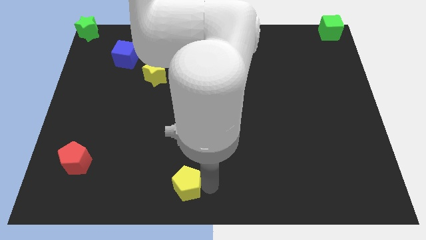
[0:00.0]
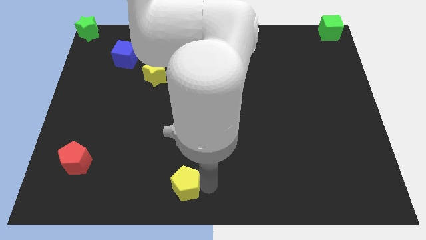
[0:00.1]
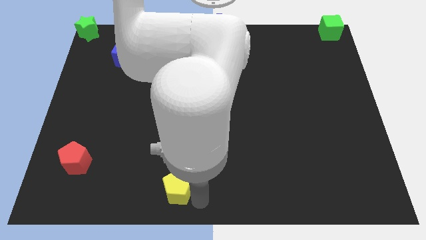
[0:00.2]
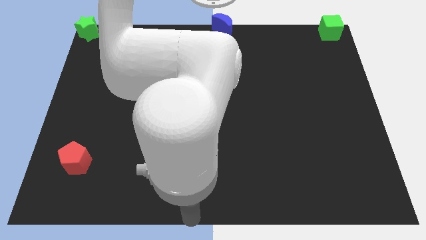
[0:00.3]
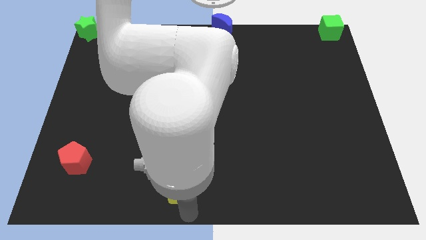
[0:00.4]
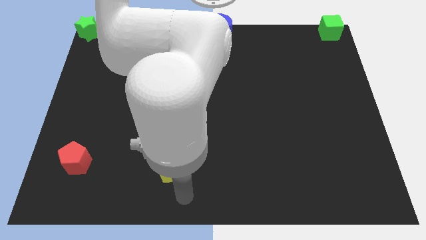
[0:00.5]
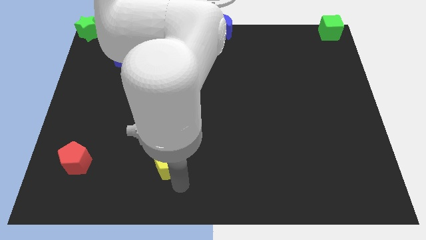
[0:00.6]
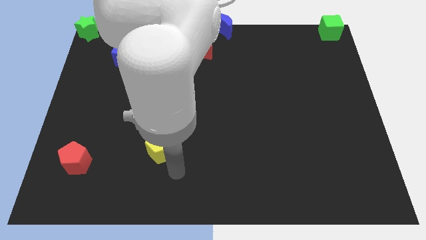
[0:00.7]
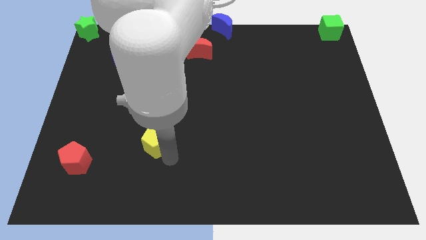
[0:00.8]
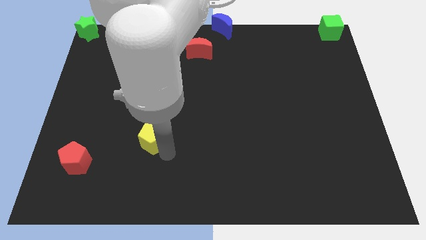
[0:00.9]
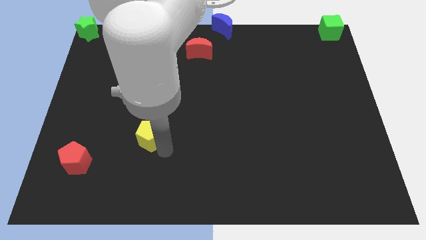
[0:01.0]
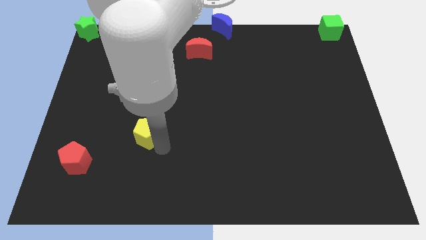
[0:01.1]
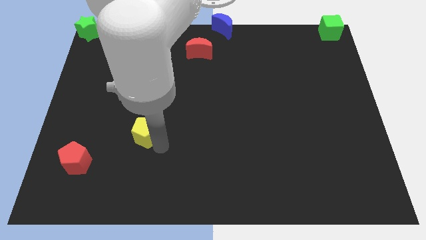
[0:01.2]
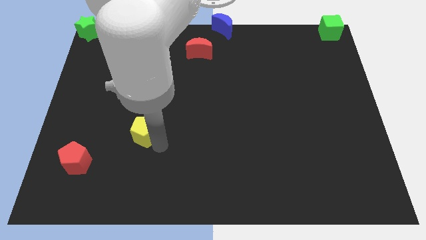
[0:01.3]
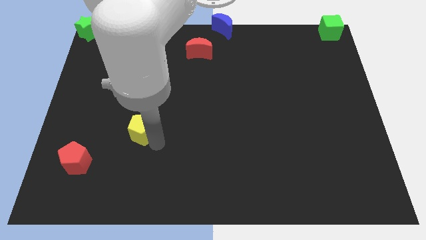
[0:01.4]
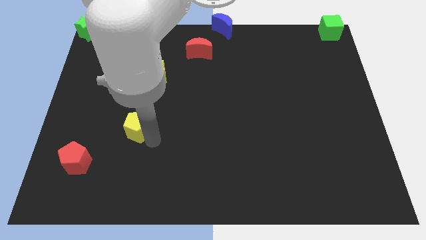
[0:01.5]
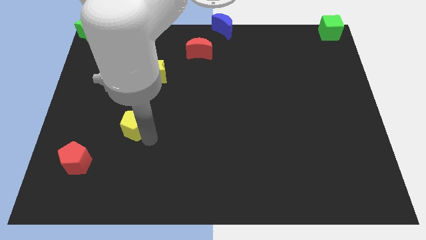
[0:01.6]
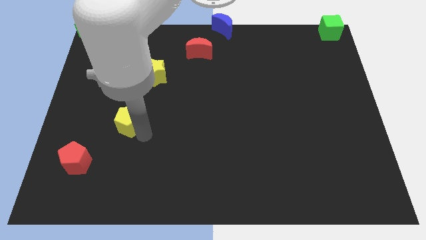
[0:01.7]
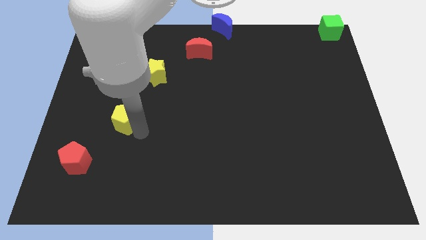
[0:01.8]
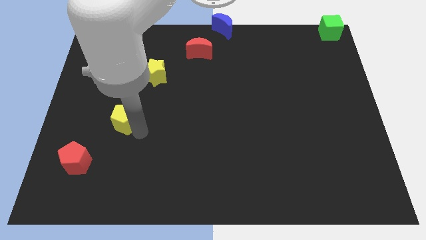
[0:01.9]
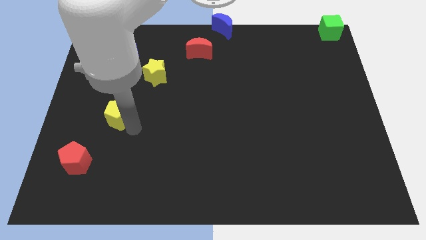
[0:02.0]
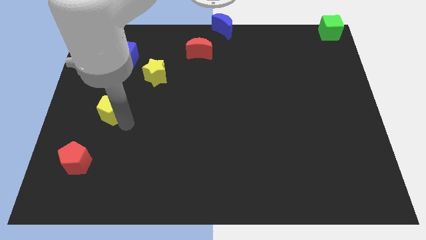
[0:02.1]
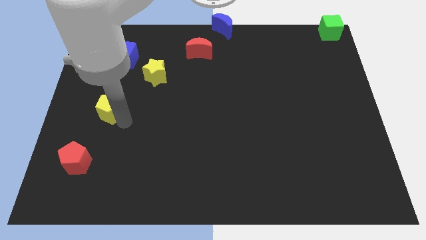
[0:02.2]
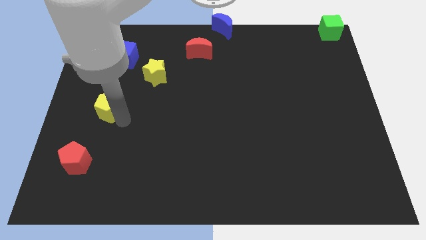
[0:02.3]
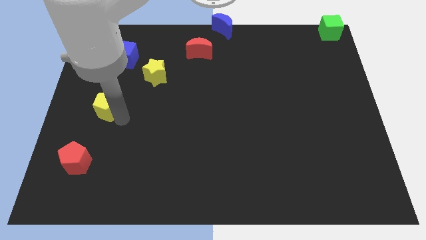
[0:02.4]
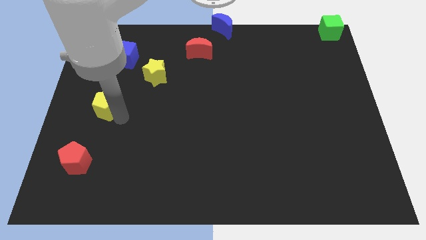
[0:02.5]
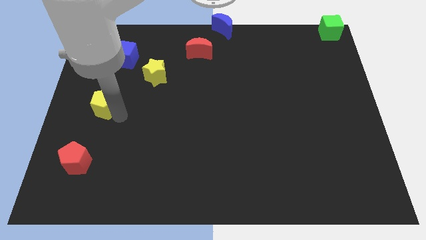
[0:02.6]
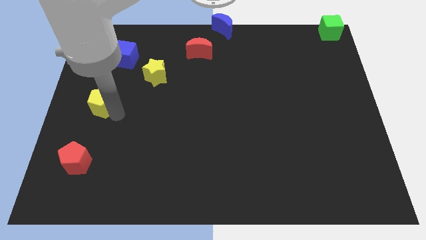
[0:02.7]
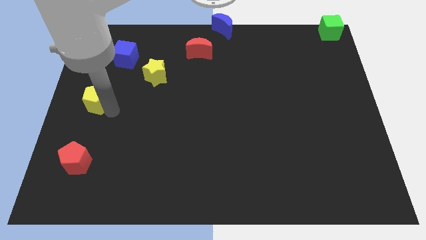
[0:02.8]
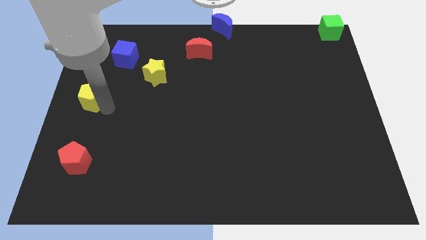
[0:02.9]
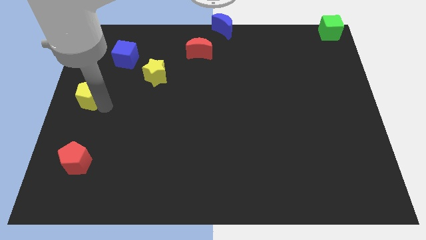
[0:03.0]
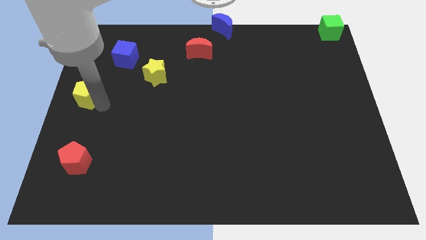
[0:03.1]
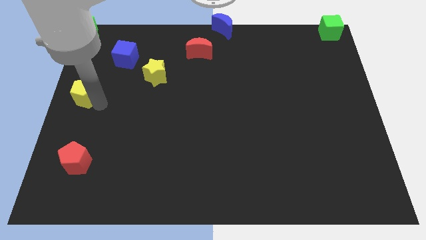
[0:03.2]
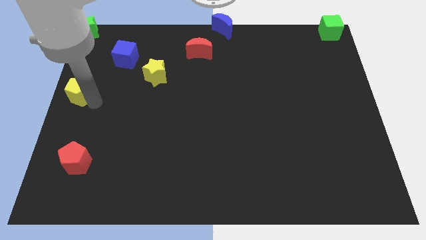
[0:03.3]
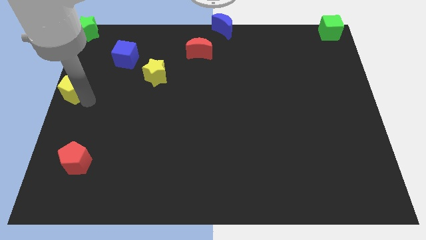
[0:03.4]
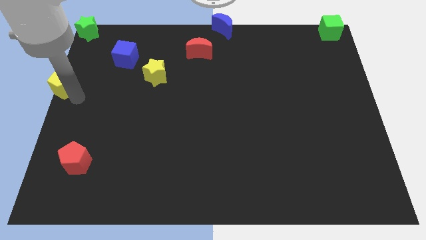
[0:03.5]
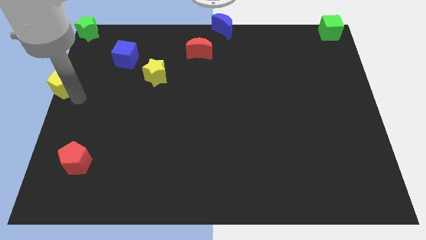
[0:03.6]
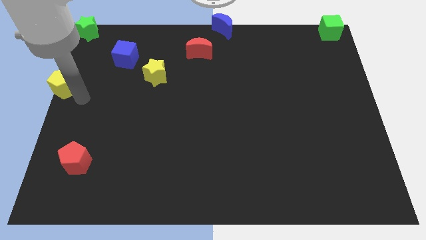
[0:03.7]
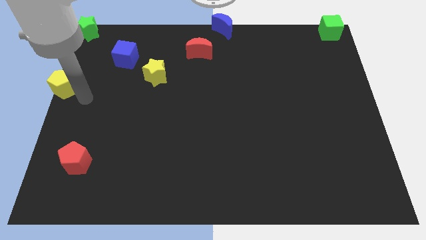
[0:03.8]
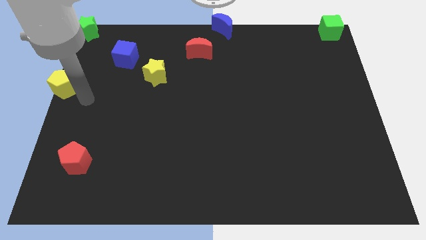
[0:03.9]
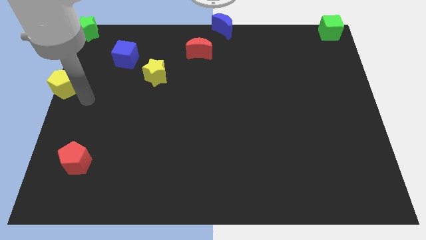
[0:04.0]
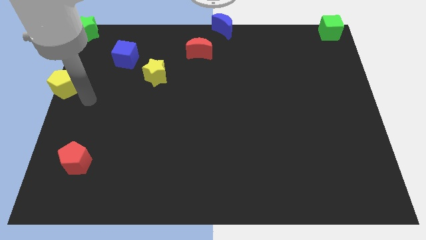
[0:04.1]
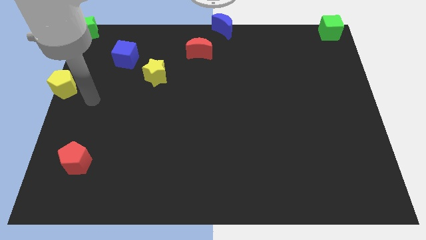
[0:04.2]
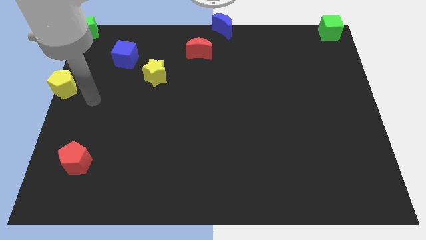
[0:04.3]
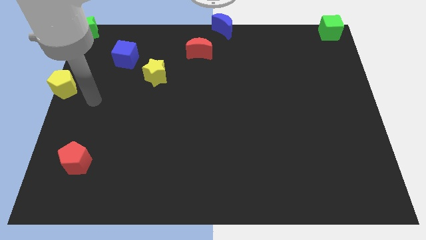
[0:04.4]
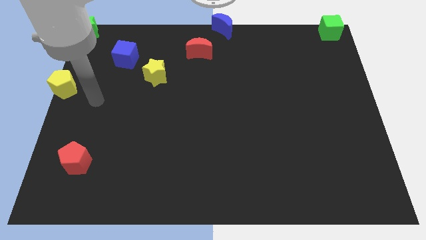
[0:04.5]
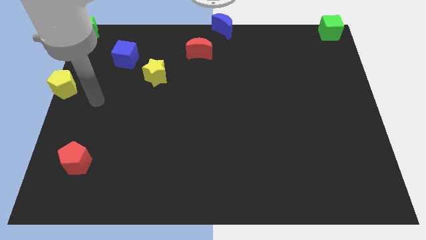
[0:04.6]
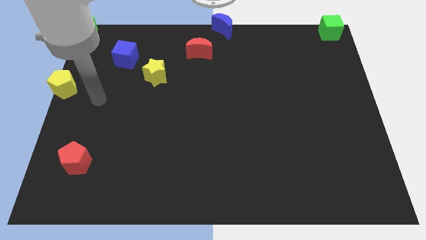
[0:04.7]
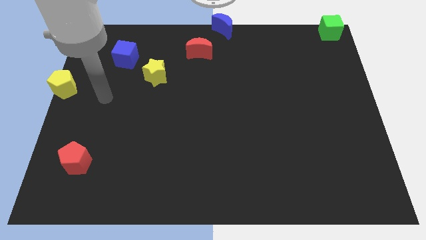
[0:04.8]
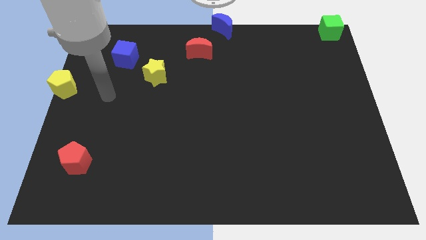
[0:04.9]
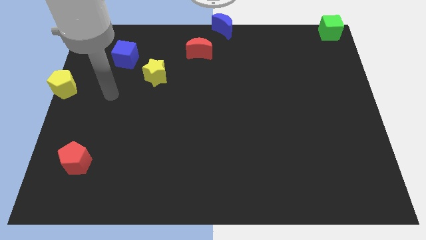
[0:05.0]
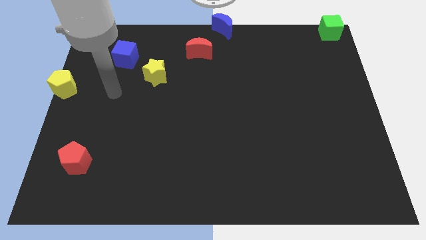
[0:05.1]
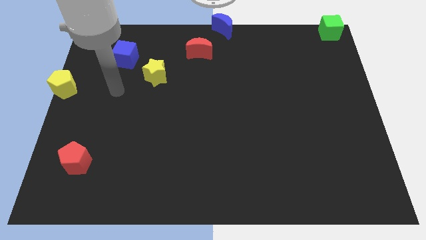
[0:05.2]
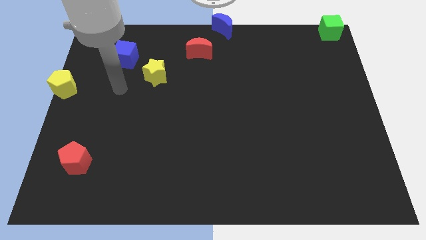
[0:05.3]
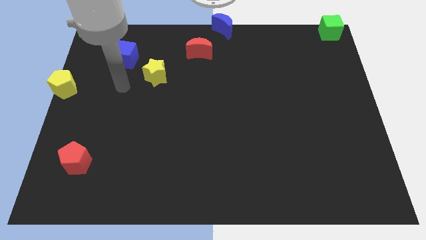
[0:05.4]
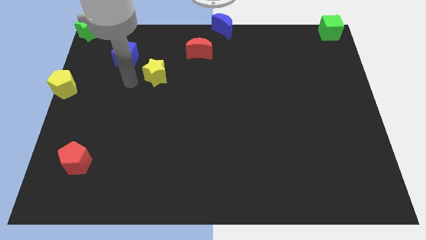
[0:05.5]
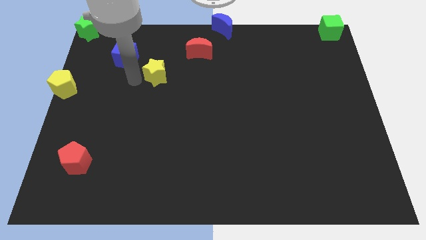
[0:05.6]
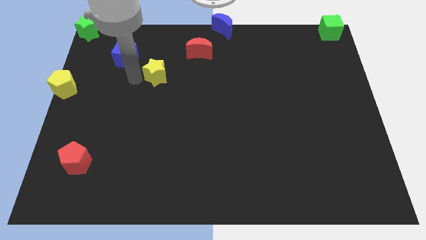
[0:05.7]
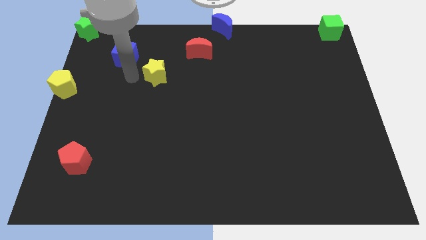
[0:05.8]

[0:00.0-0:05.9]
place the yellow pentagon below the green star

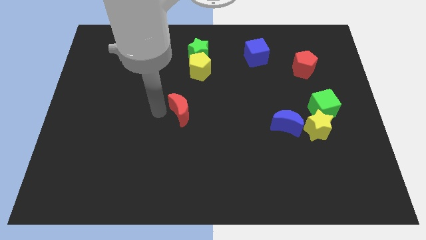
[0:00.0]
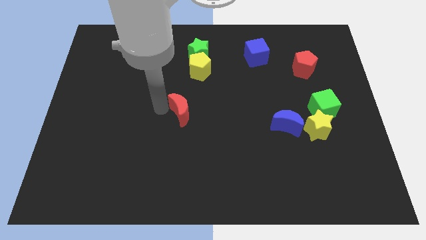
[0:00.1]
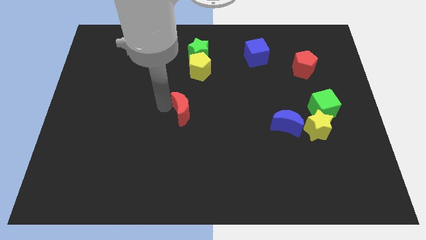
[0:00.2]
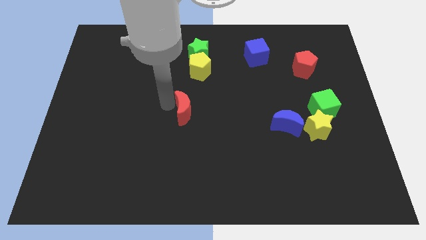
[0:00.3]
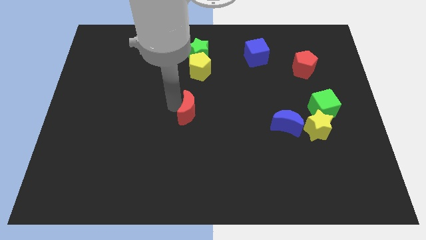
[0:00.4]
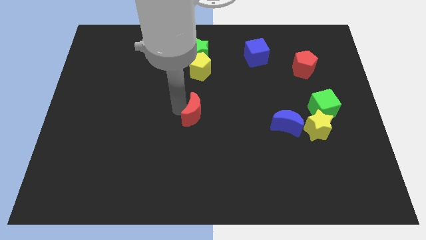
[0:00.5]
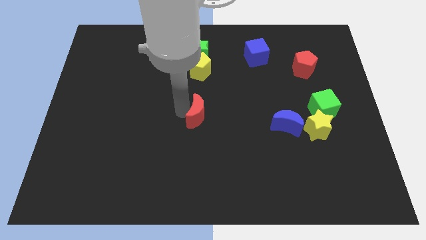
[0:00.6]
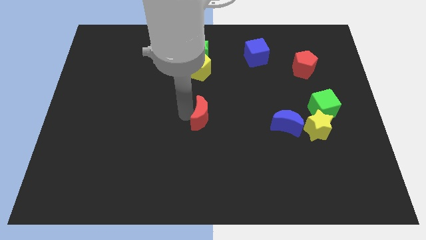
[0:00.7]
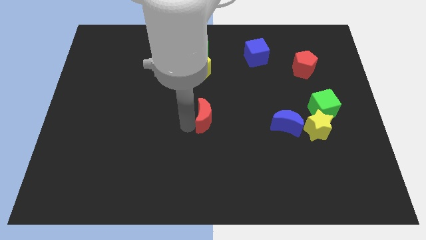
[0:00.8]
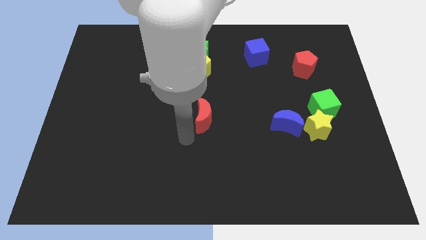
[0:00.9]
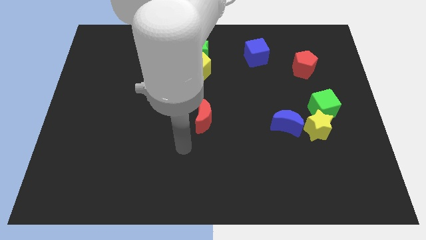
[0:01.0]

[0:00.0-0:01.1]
move the red crescent below the yellow pentagon

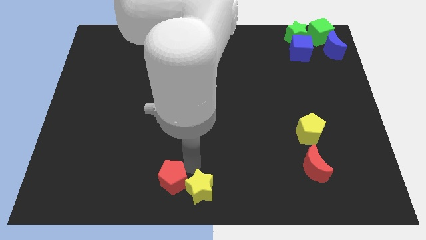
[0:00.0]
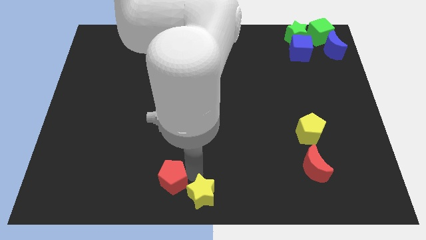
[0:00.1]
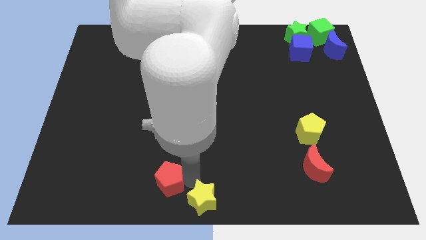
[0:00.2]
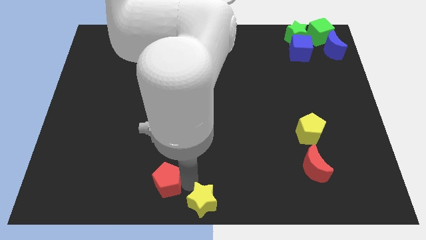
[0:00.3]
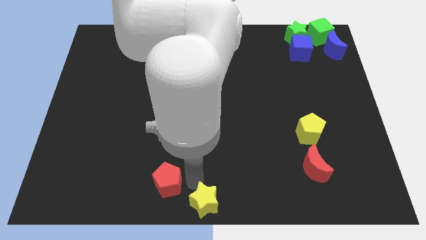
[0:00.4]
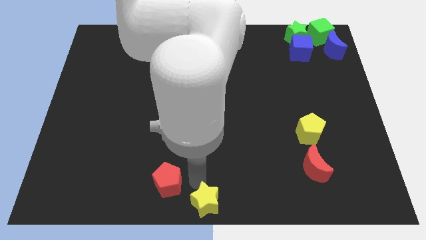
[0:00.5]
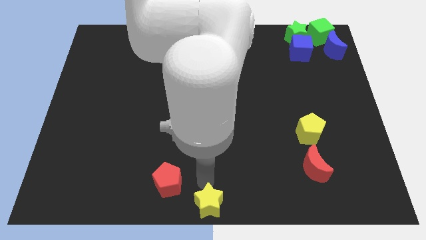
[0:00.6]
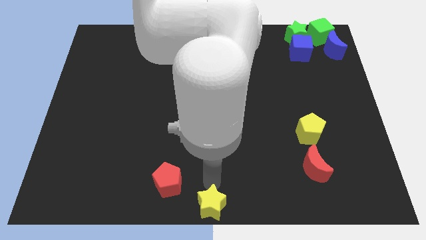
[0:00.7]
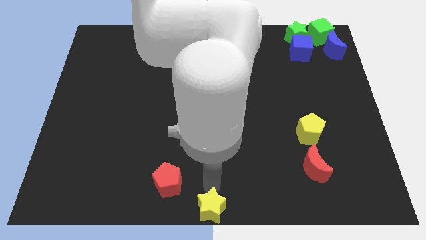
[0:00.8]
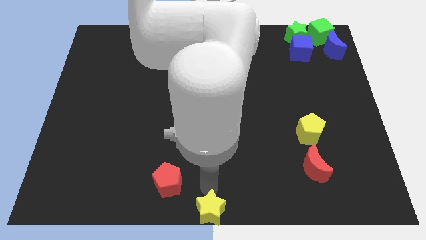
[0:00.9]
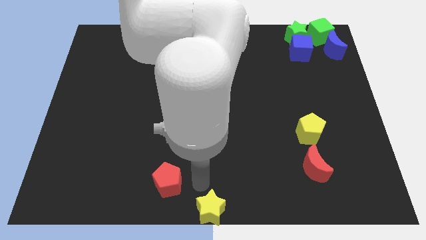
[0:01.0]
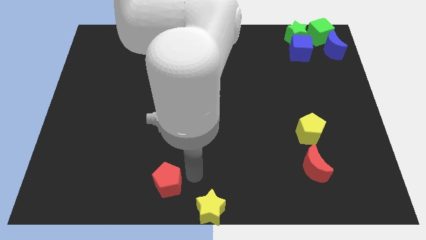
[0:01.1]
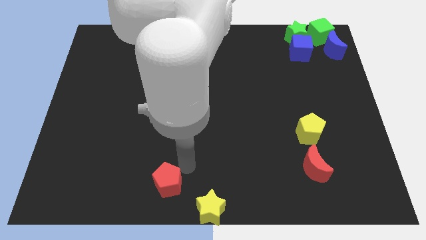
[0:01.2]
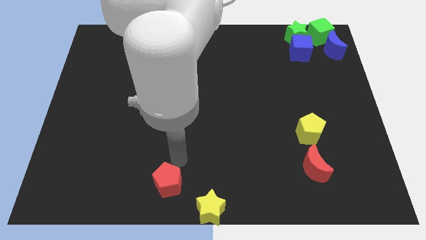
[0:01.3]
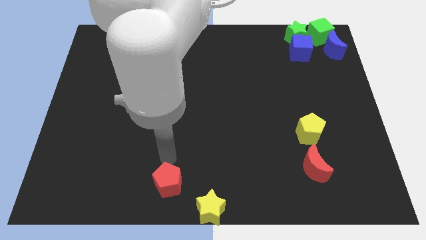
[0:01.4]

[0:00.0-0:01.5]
separate yellow star from red pentagon

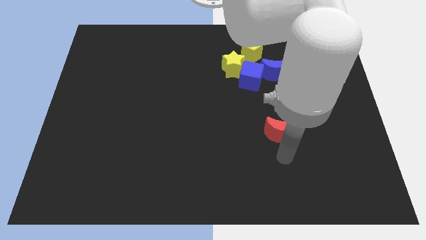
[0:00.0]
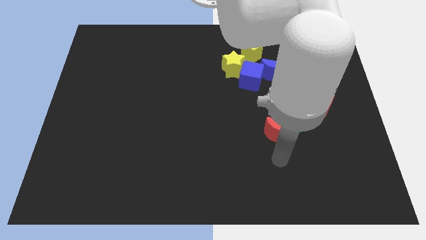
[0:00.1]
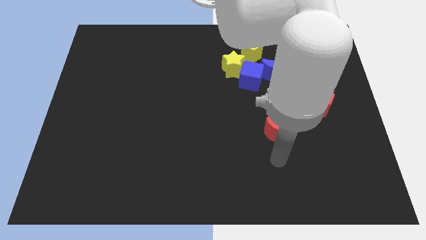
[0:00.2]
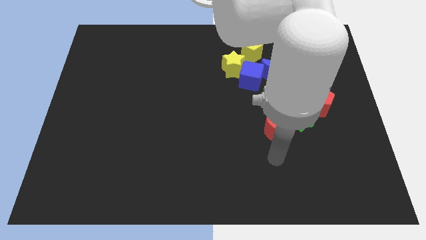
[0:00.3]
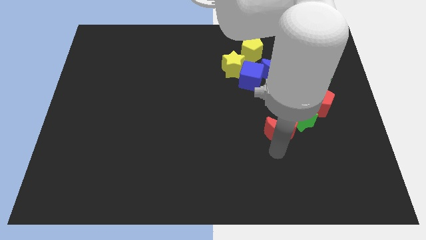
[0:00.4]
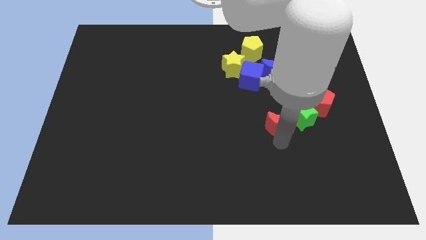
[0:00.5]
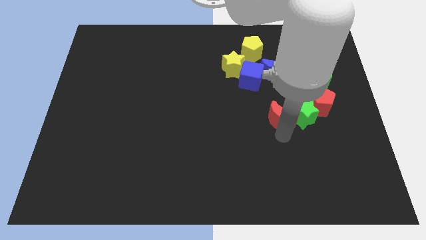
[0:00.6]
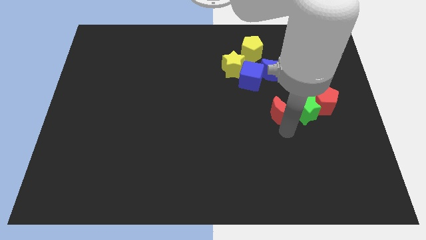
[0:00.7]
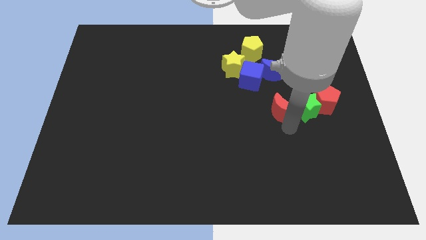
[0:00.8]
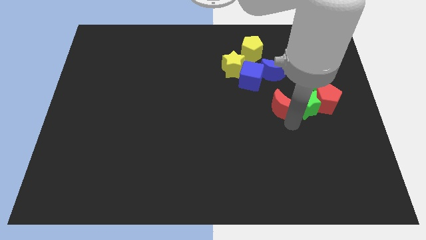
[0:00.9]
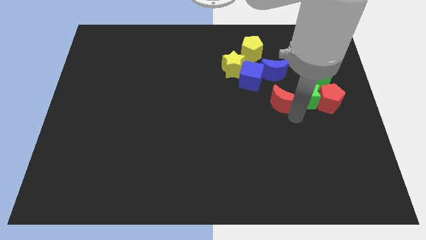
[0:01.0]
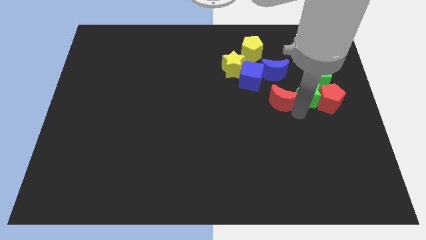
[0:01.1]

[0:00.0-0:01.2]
move the red moon into the green star
